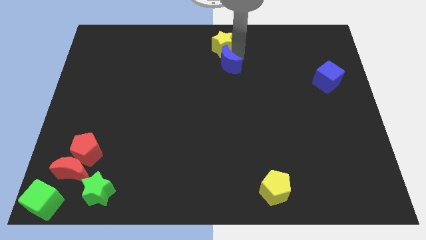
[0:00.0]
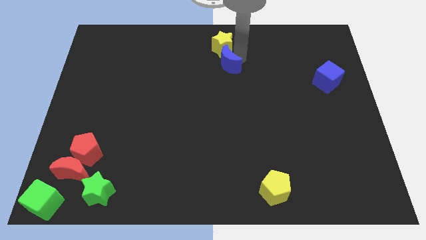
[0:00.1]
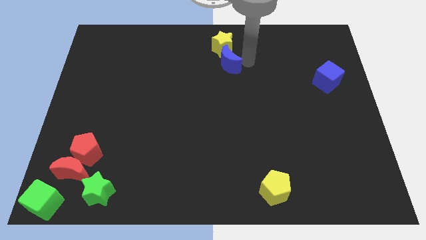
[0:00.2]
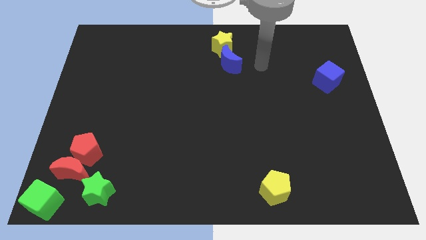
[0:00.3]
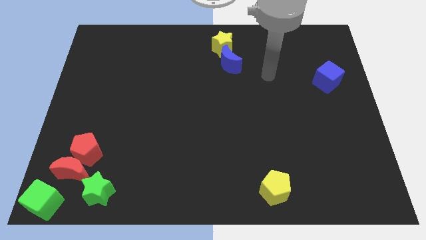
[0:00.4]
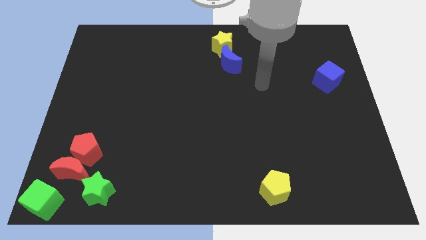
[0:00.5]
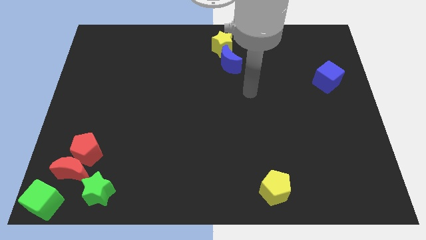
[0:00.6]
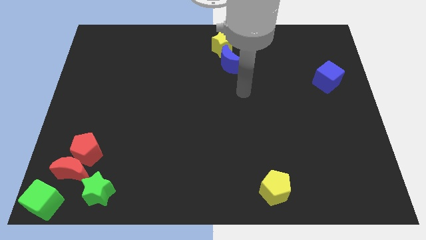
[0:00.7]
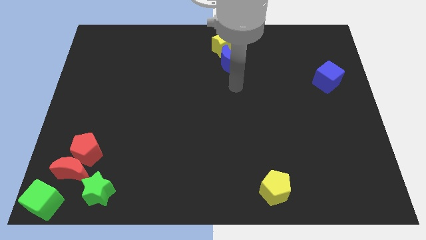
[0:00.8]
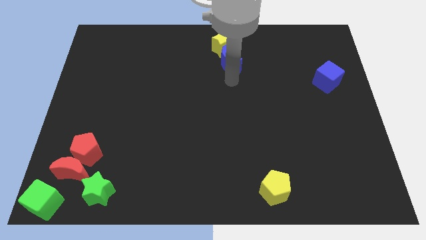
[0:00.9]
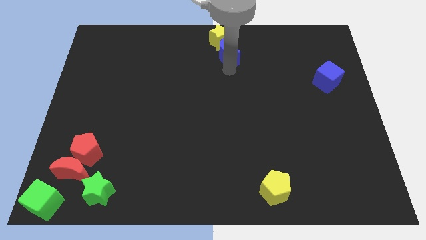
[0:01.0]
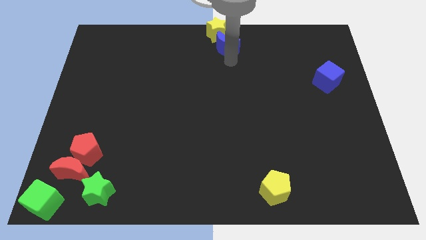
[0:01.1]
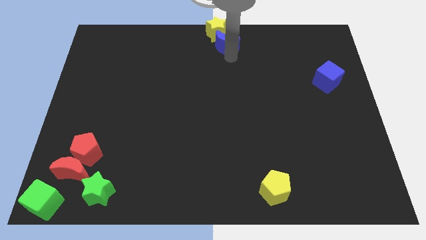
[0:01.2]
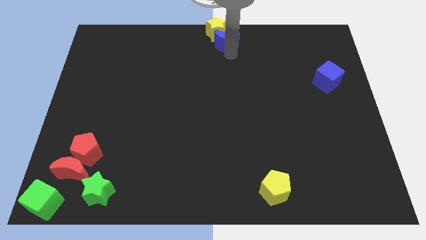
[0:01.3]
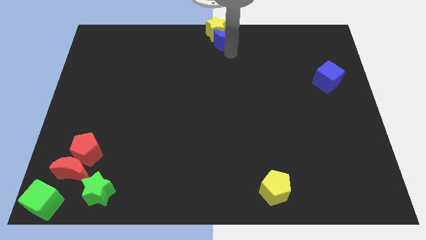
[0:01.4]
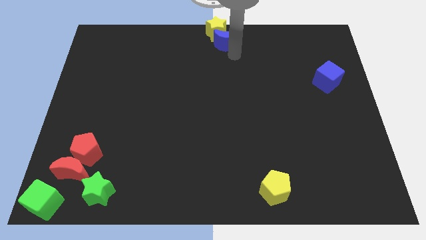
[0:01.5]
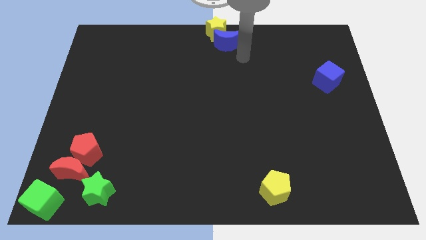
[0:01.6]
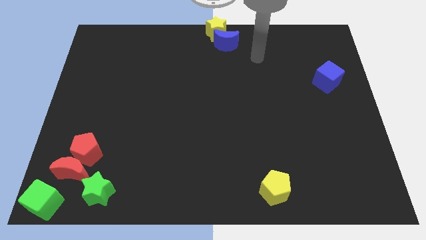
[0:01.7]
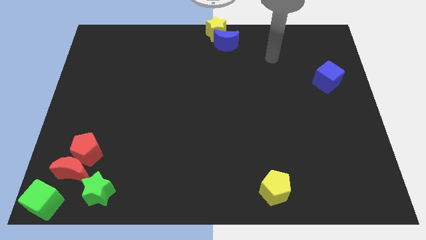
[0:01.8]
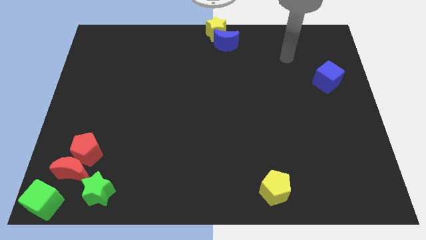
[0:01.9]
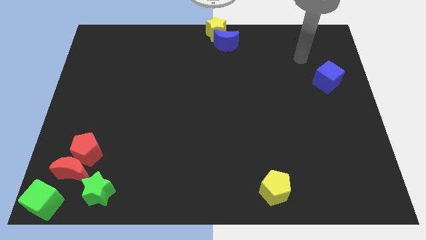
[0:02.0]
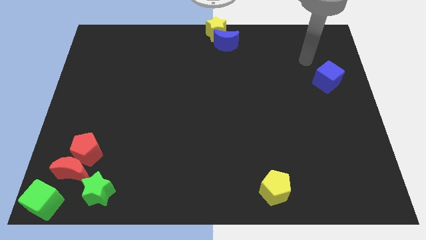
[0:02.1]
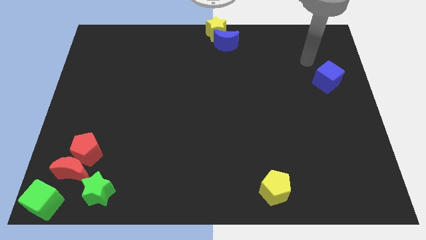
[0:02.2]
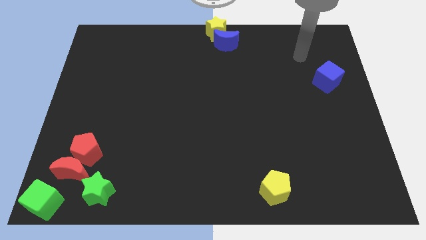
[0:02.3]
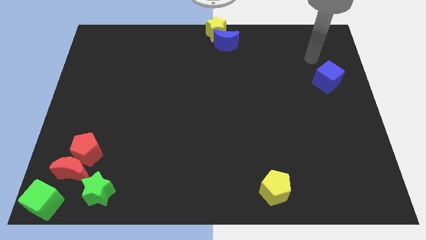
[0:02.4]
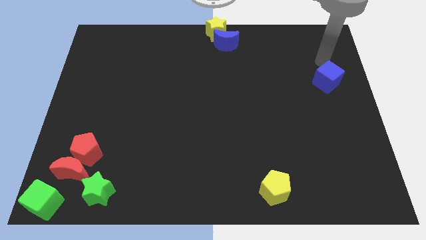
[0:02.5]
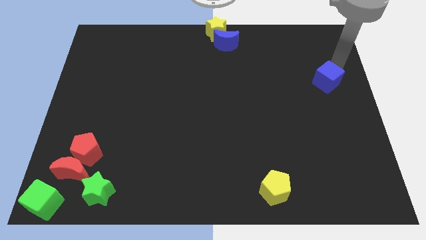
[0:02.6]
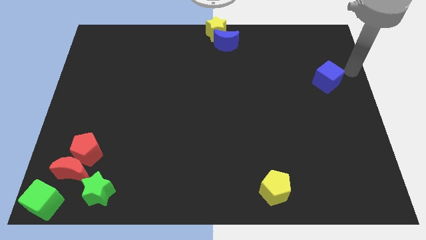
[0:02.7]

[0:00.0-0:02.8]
push yellow star and blue moon to the top center of the board

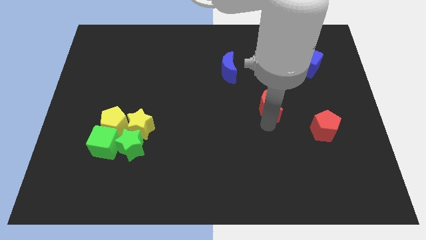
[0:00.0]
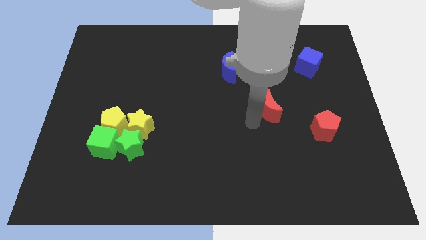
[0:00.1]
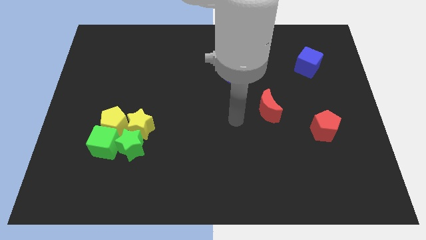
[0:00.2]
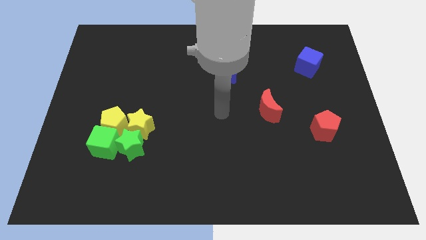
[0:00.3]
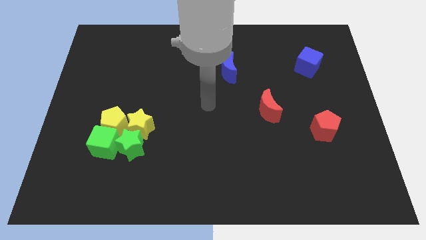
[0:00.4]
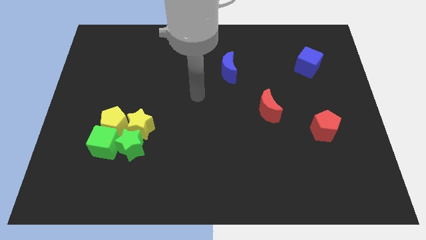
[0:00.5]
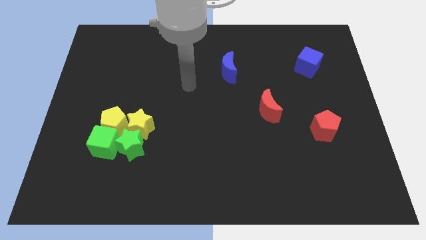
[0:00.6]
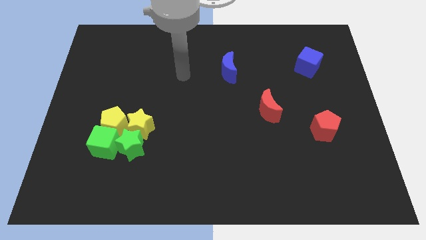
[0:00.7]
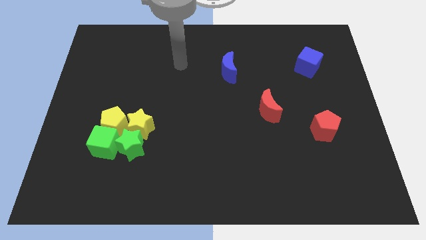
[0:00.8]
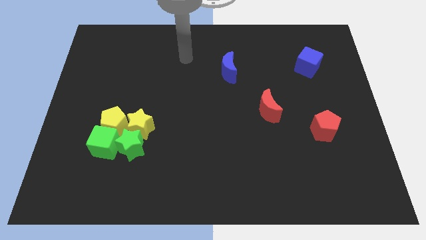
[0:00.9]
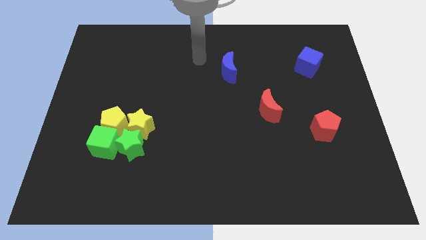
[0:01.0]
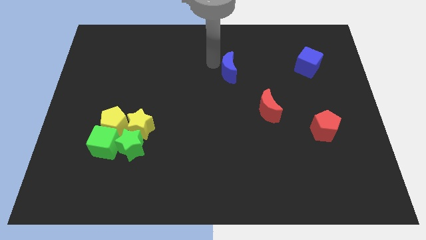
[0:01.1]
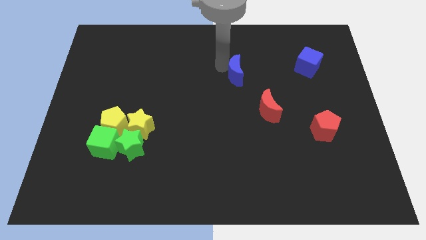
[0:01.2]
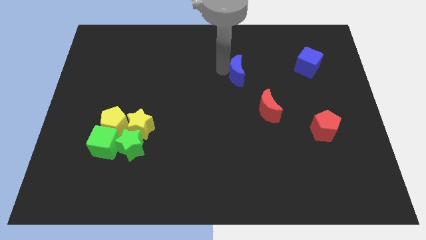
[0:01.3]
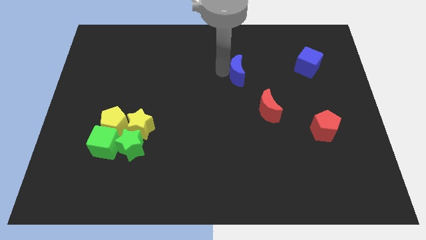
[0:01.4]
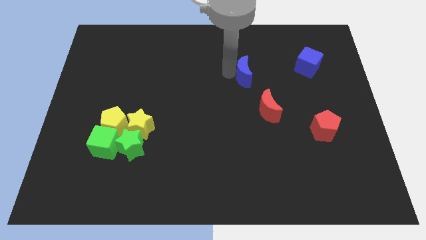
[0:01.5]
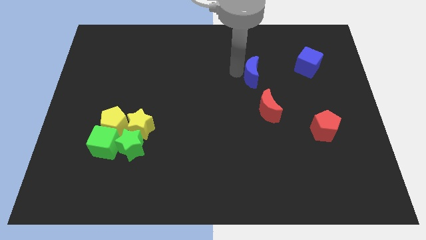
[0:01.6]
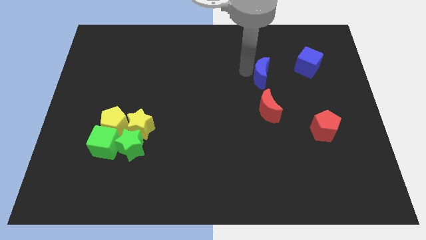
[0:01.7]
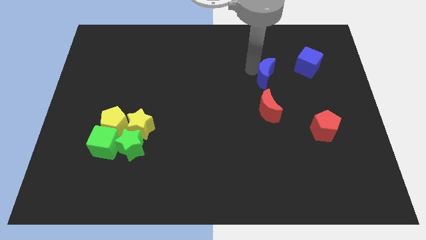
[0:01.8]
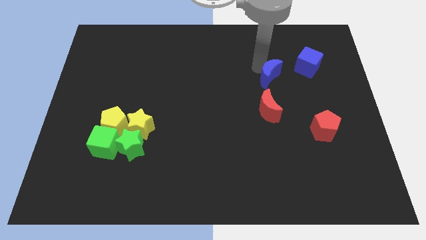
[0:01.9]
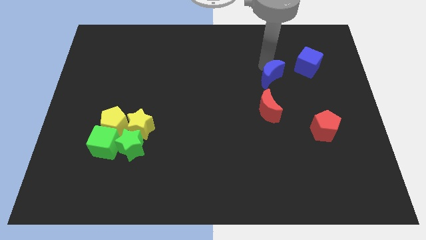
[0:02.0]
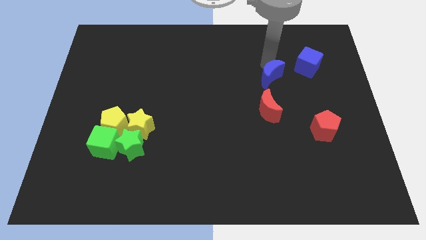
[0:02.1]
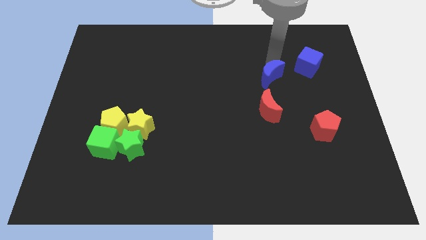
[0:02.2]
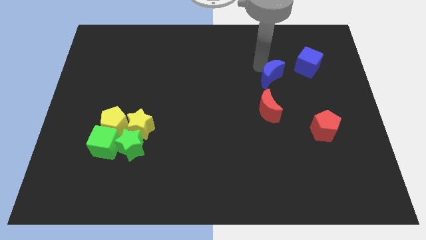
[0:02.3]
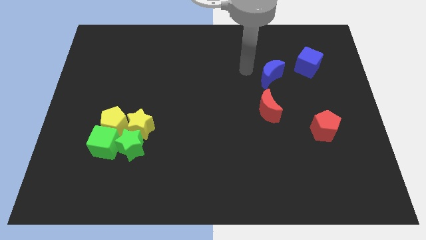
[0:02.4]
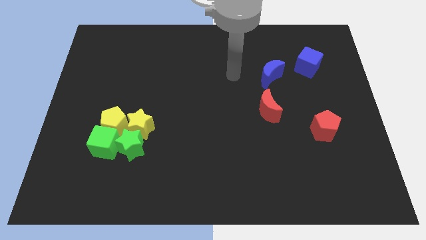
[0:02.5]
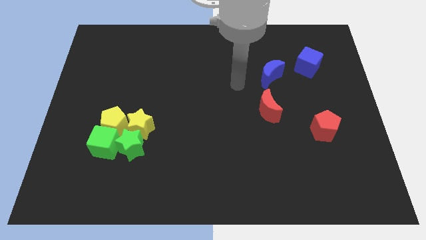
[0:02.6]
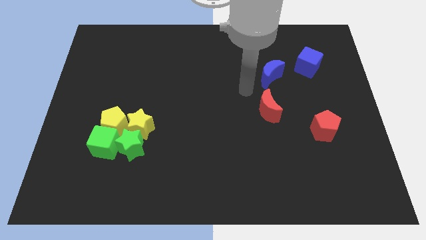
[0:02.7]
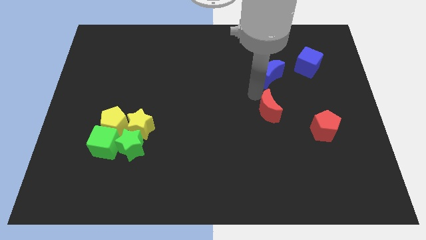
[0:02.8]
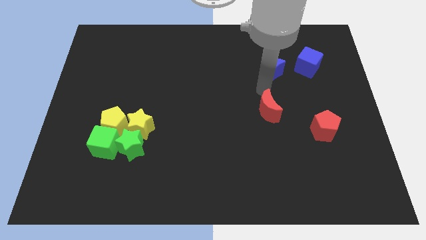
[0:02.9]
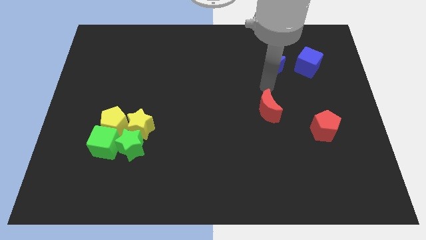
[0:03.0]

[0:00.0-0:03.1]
push the blue crescent to the left of the blue cube

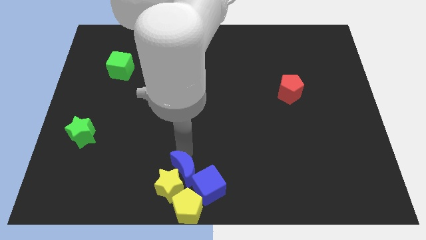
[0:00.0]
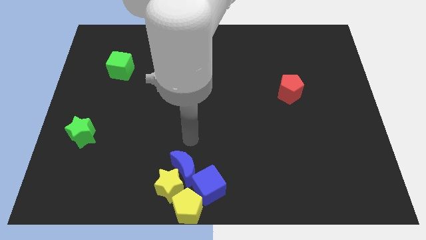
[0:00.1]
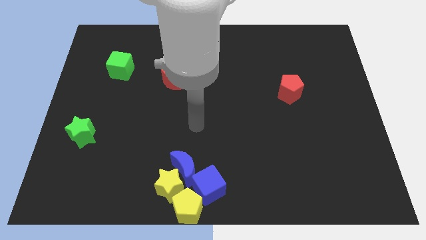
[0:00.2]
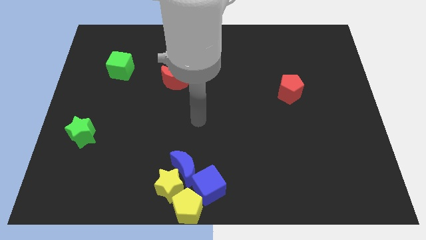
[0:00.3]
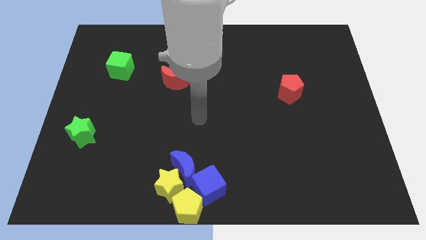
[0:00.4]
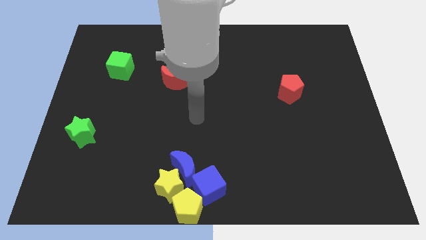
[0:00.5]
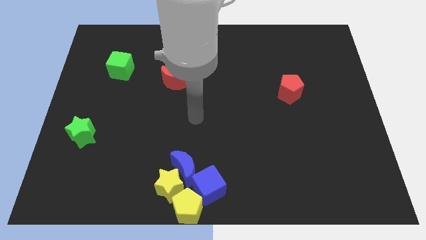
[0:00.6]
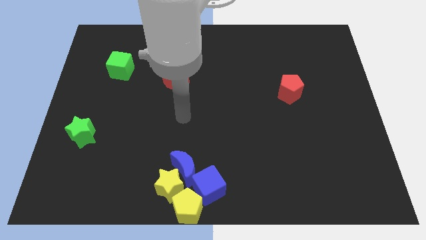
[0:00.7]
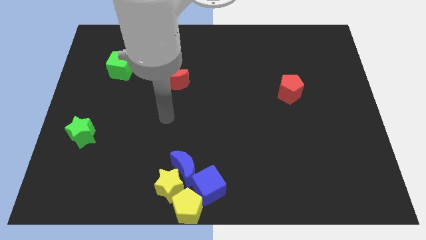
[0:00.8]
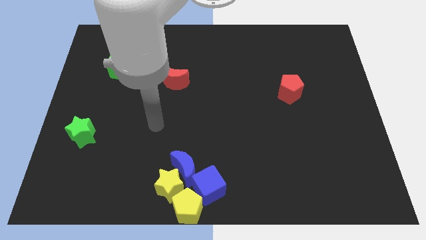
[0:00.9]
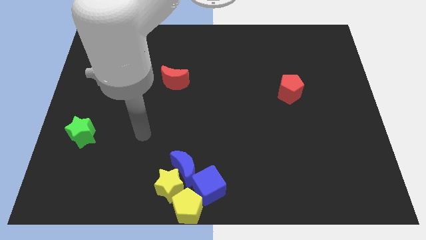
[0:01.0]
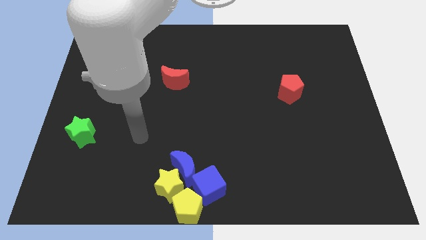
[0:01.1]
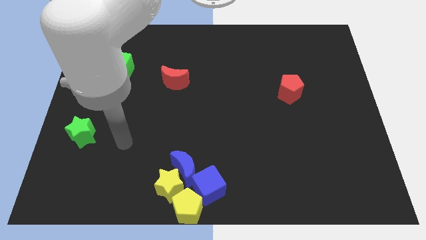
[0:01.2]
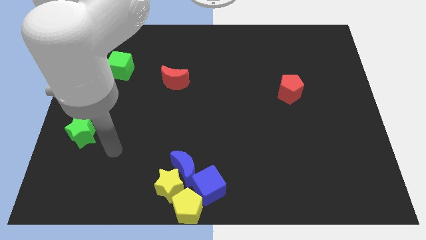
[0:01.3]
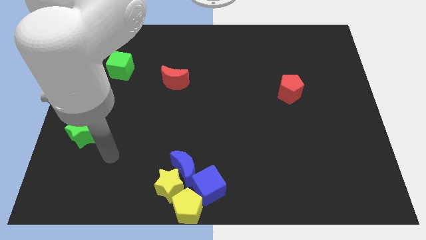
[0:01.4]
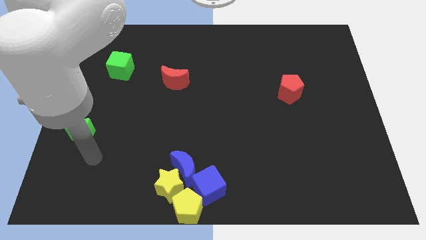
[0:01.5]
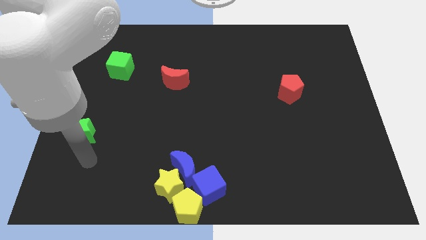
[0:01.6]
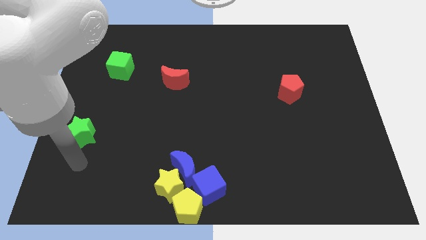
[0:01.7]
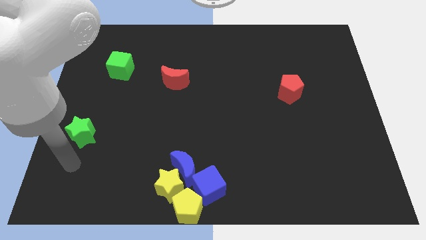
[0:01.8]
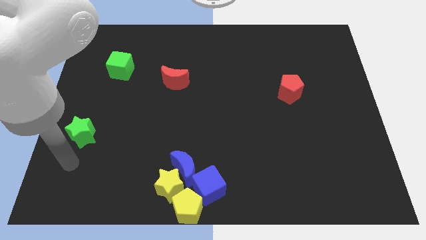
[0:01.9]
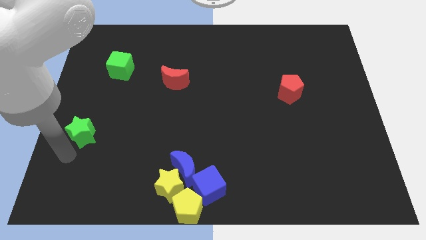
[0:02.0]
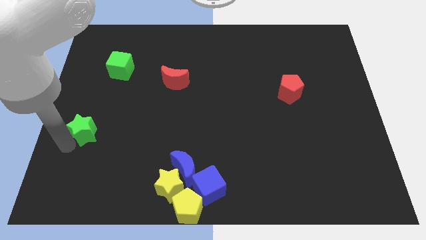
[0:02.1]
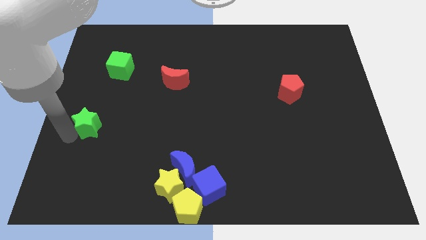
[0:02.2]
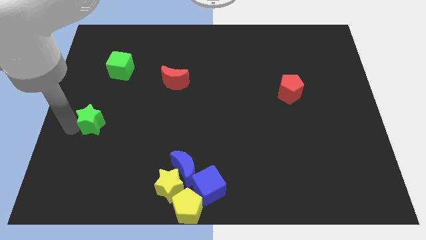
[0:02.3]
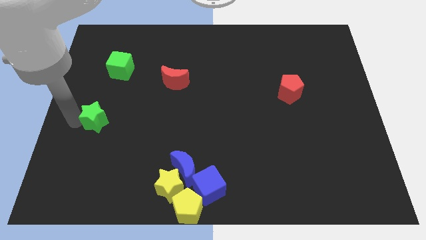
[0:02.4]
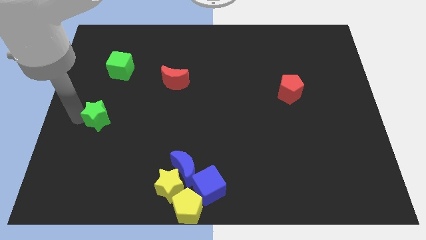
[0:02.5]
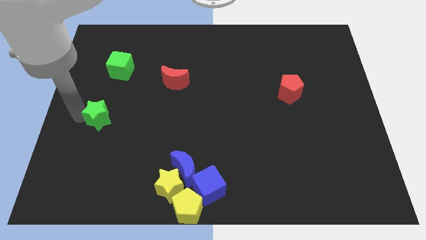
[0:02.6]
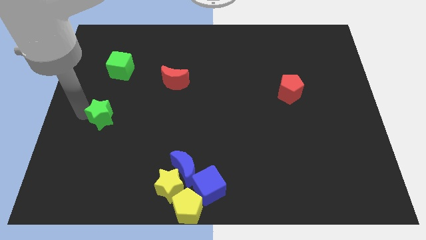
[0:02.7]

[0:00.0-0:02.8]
move the green star to the bottom of the green cube

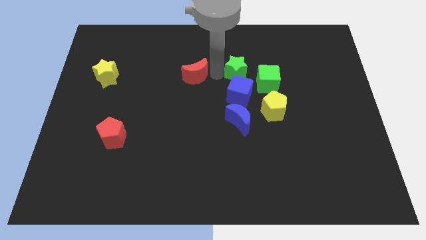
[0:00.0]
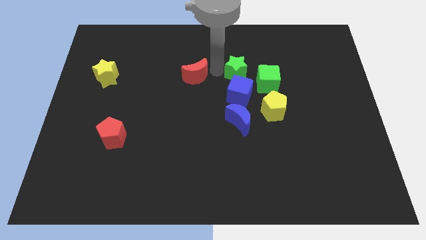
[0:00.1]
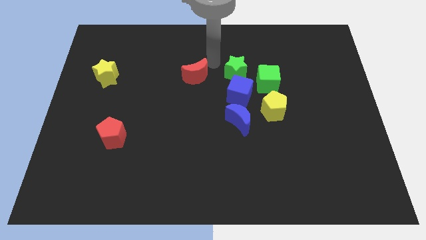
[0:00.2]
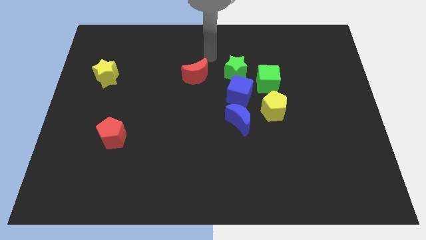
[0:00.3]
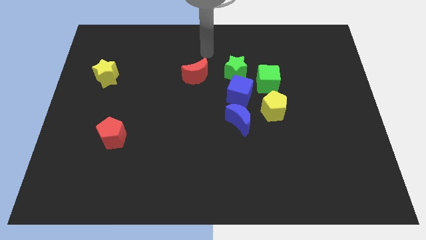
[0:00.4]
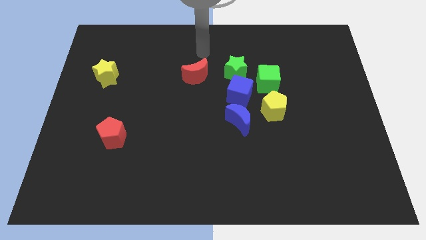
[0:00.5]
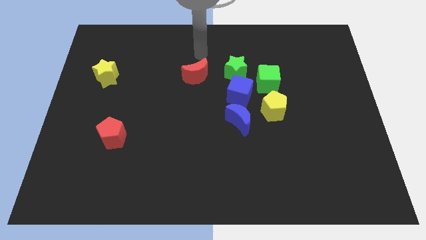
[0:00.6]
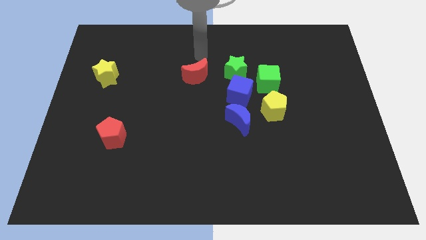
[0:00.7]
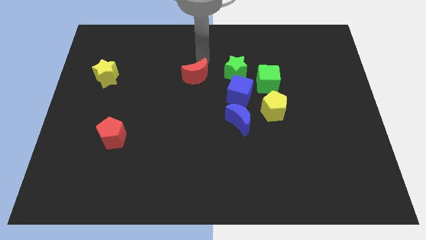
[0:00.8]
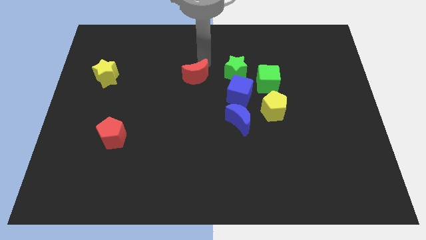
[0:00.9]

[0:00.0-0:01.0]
tap red moon on its top
